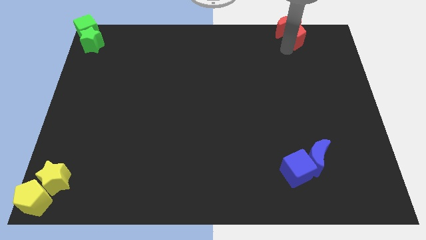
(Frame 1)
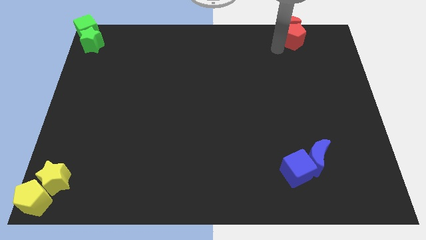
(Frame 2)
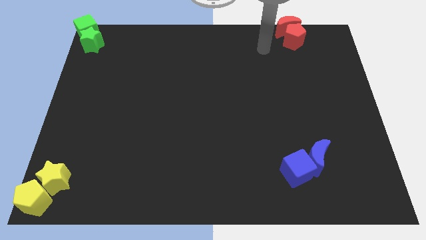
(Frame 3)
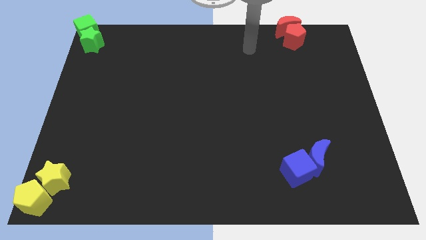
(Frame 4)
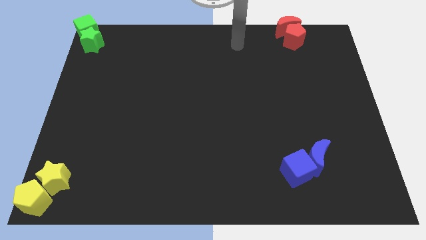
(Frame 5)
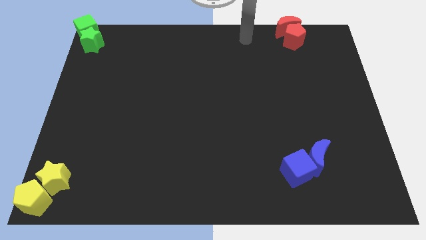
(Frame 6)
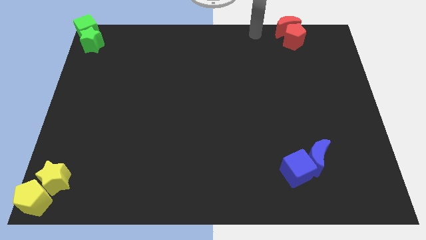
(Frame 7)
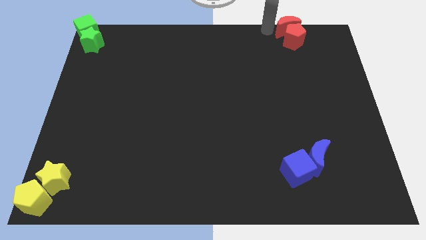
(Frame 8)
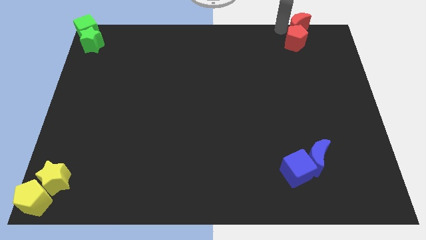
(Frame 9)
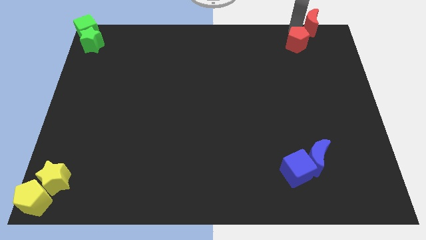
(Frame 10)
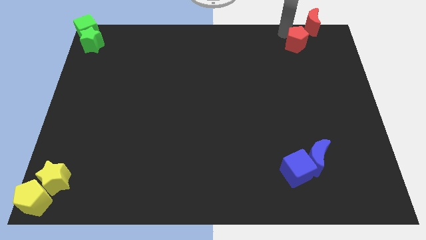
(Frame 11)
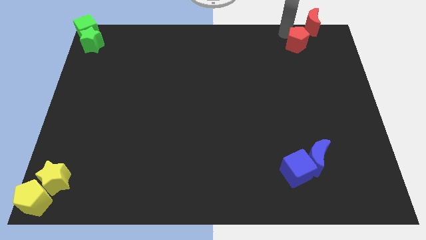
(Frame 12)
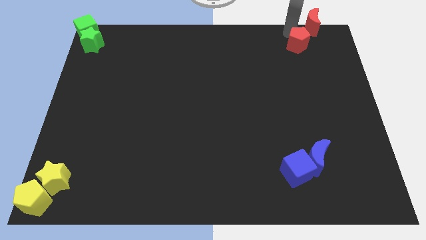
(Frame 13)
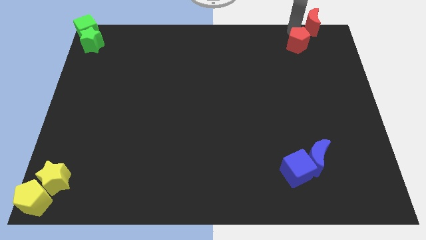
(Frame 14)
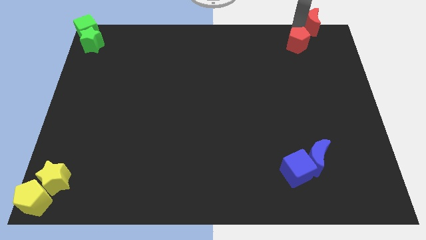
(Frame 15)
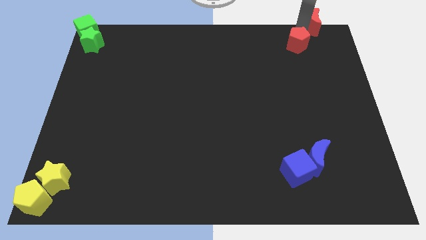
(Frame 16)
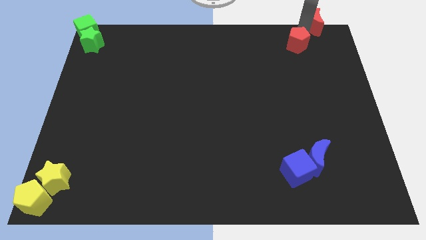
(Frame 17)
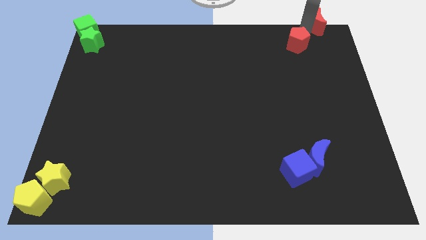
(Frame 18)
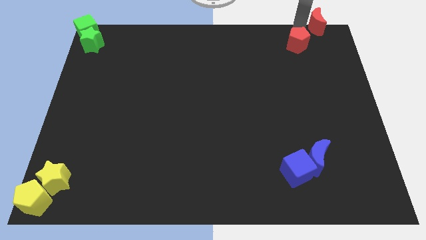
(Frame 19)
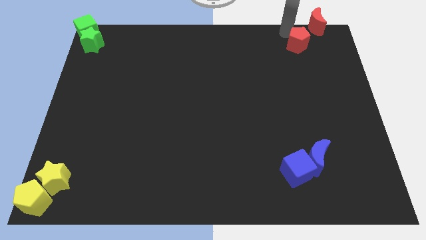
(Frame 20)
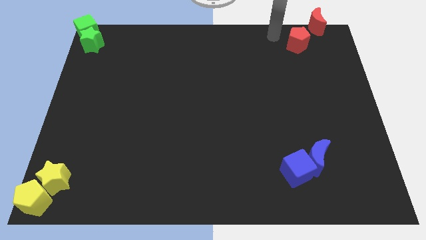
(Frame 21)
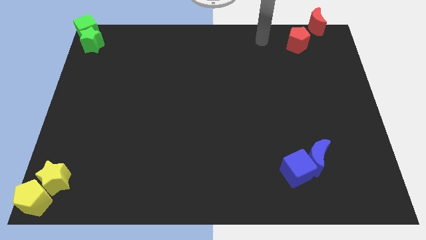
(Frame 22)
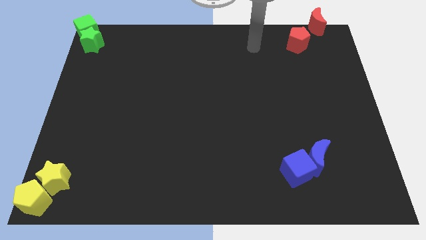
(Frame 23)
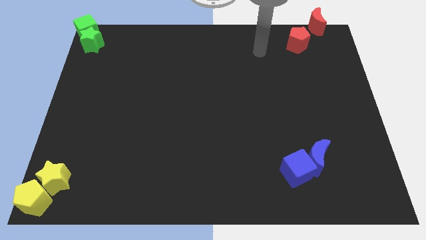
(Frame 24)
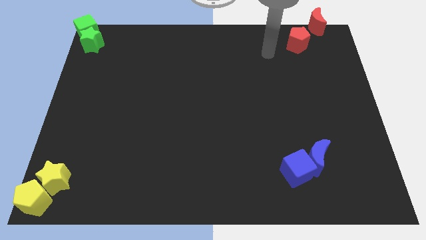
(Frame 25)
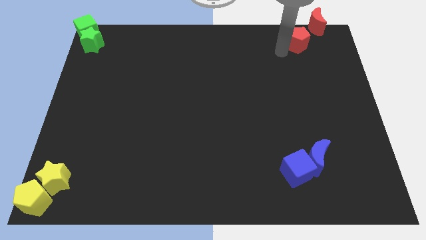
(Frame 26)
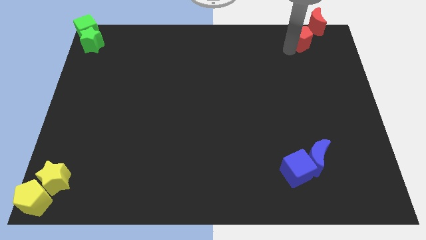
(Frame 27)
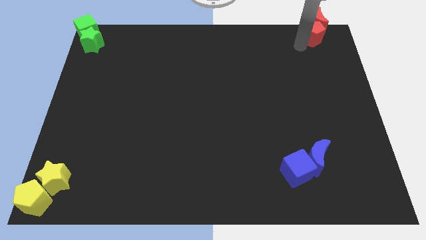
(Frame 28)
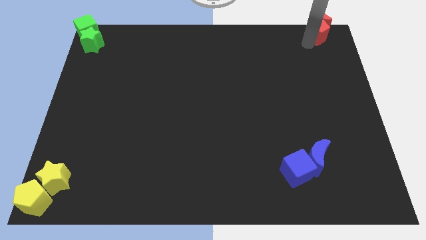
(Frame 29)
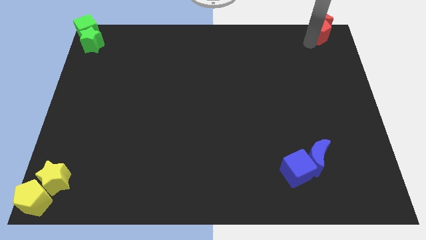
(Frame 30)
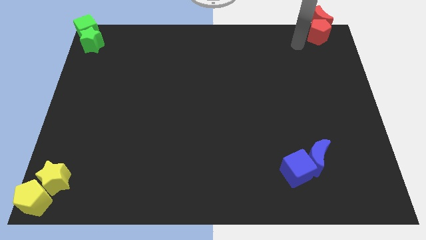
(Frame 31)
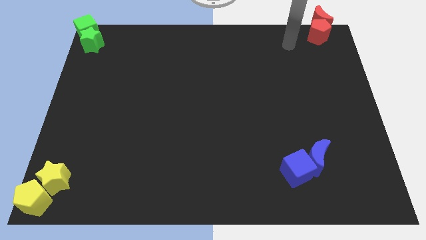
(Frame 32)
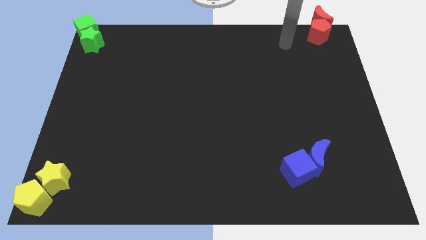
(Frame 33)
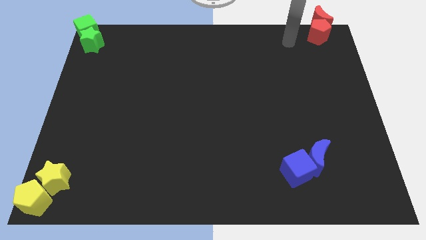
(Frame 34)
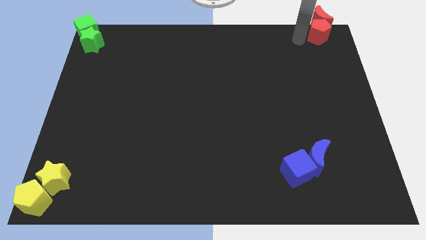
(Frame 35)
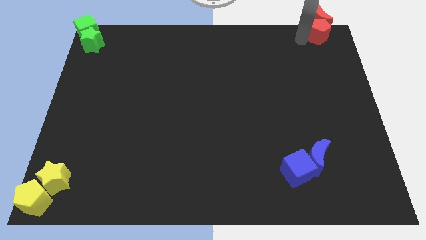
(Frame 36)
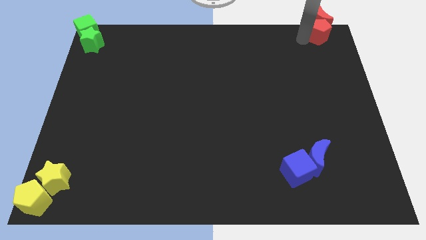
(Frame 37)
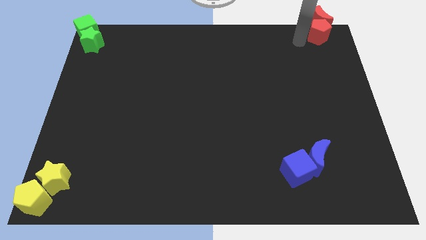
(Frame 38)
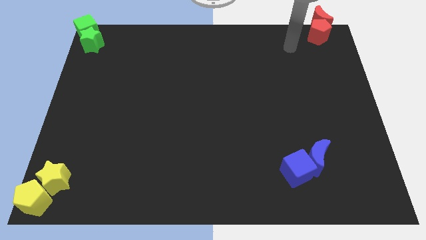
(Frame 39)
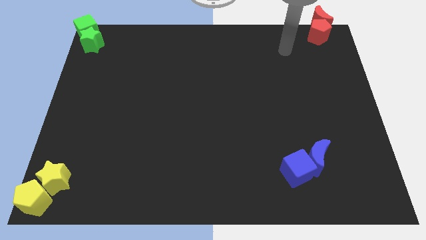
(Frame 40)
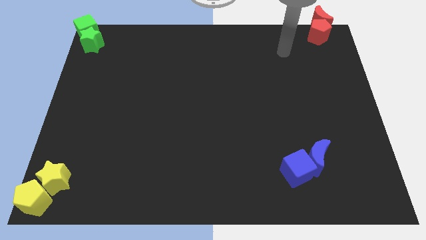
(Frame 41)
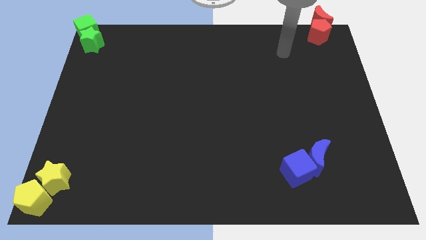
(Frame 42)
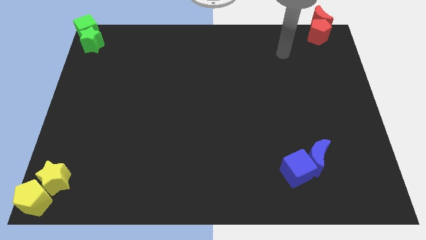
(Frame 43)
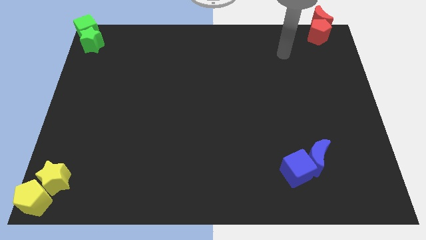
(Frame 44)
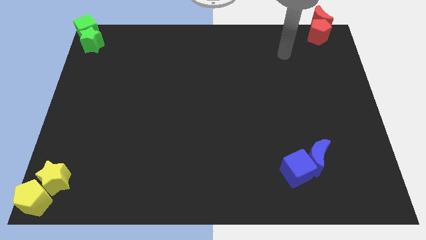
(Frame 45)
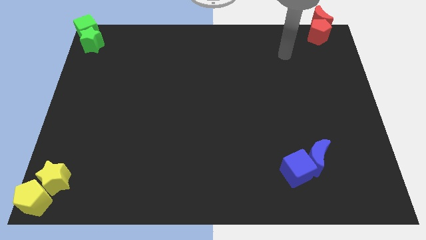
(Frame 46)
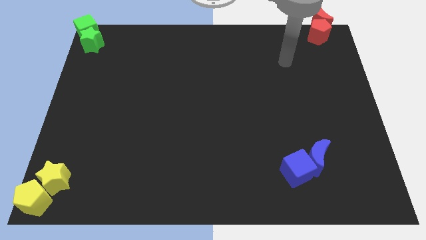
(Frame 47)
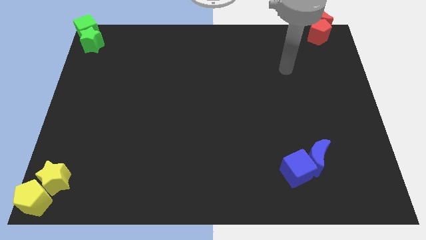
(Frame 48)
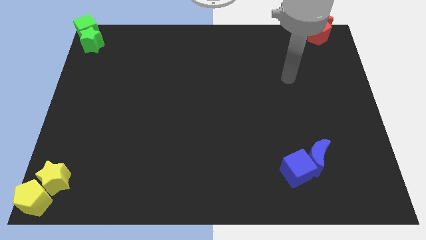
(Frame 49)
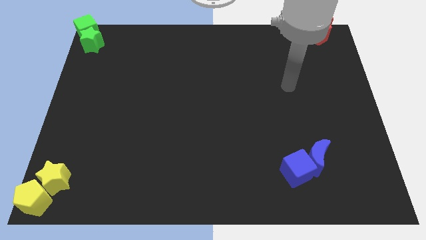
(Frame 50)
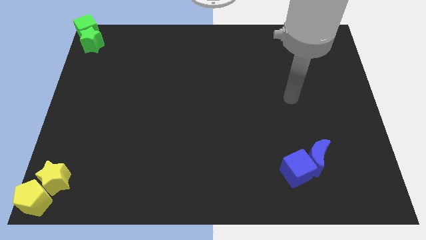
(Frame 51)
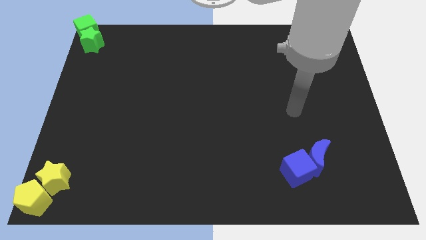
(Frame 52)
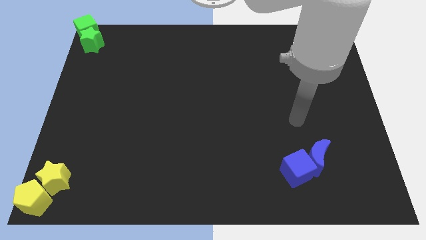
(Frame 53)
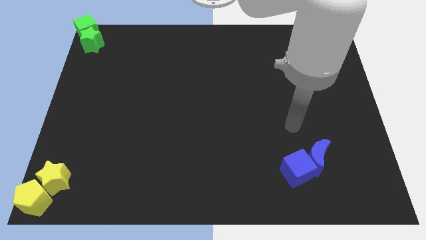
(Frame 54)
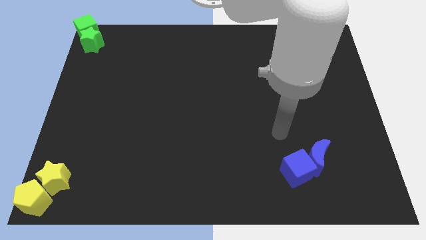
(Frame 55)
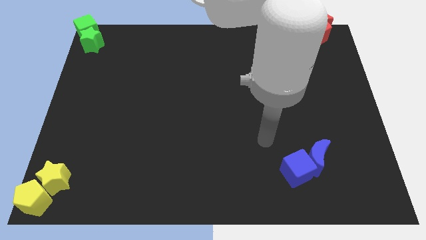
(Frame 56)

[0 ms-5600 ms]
push the red blocks towards the top right corner of the board

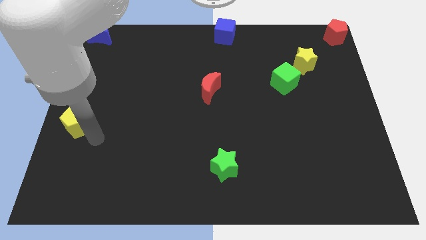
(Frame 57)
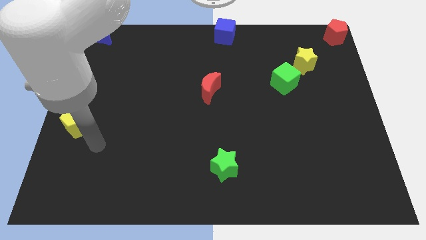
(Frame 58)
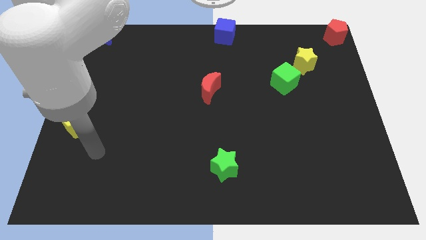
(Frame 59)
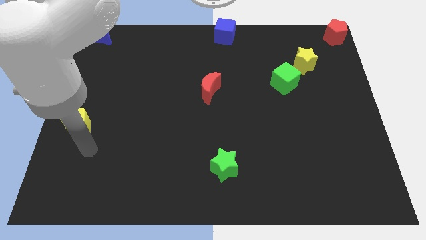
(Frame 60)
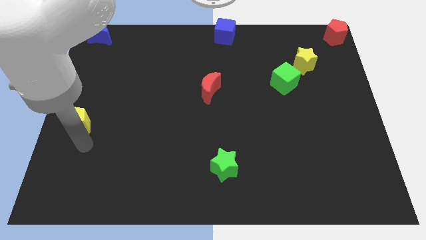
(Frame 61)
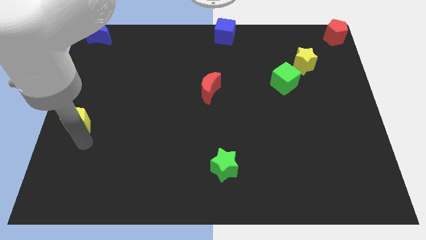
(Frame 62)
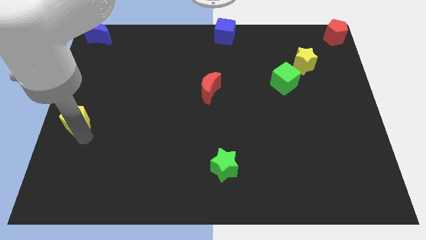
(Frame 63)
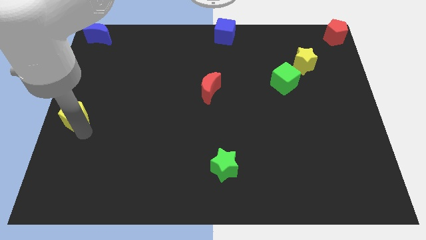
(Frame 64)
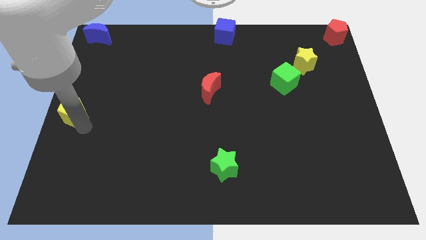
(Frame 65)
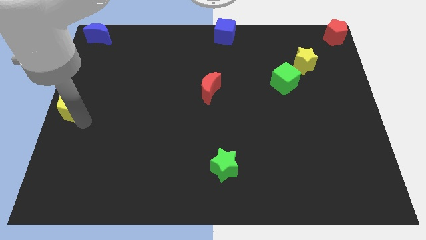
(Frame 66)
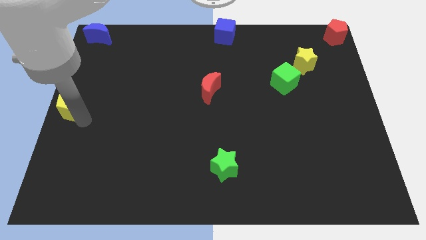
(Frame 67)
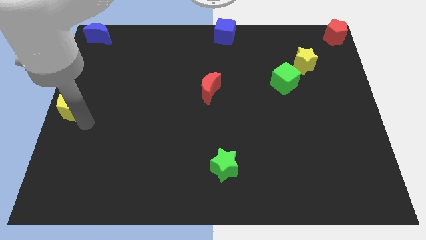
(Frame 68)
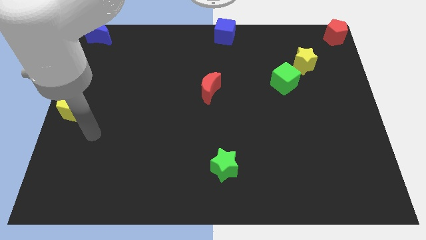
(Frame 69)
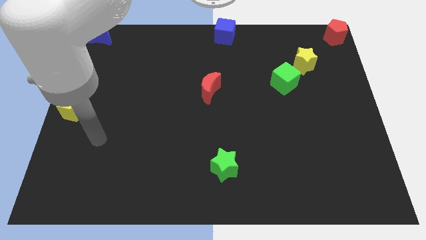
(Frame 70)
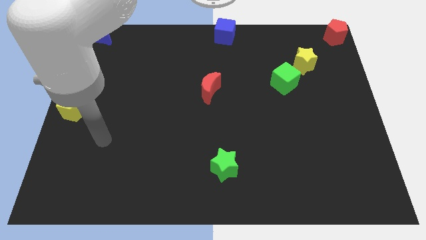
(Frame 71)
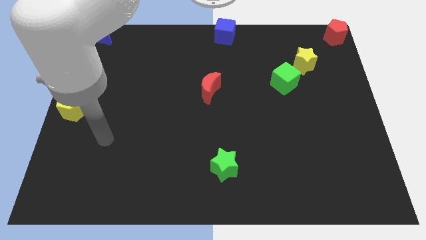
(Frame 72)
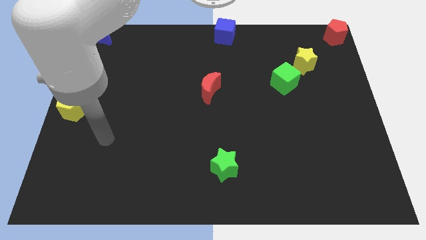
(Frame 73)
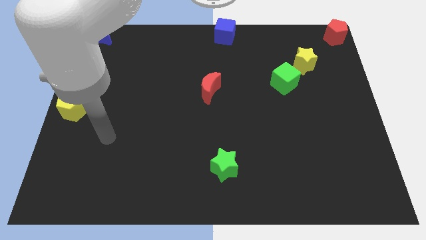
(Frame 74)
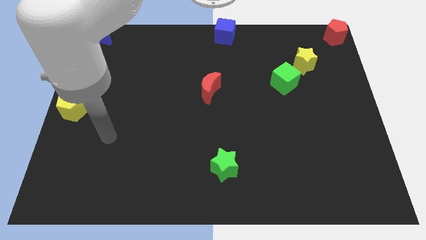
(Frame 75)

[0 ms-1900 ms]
place the yellow pentagon at the left centre of the board

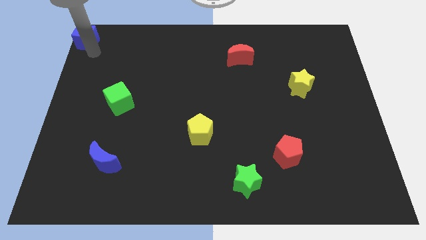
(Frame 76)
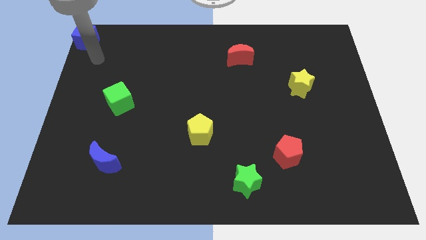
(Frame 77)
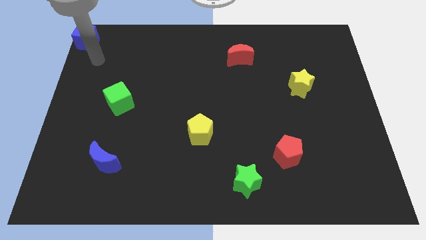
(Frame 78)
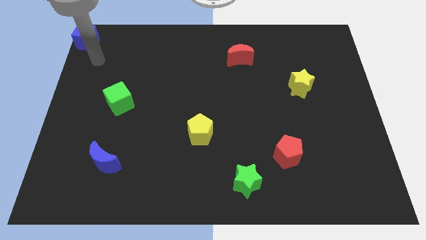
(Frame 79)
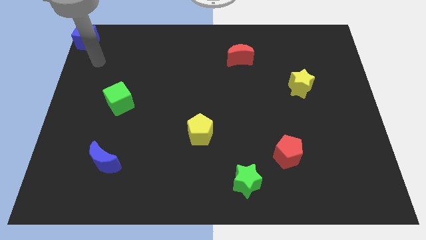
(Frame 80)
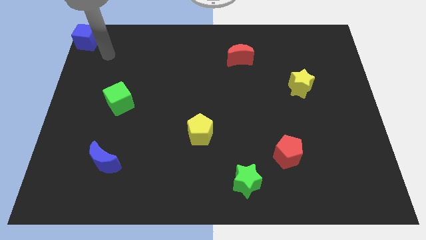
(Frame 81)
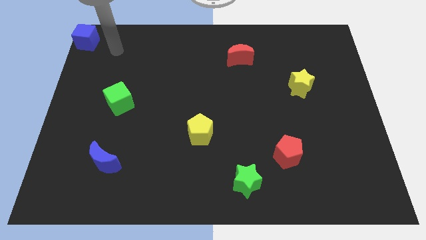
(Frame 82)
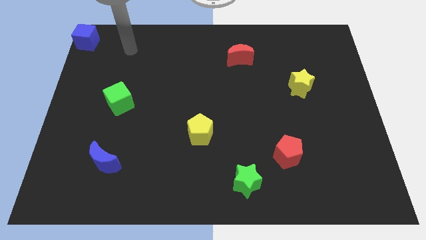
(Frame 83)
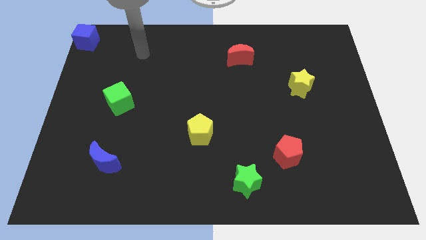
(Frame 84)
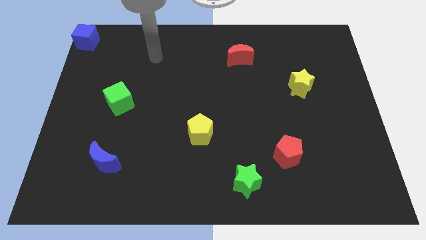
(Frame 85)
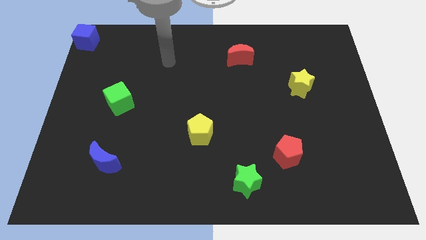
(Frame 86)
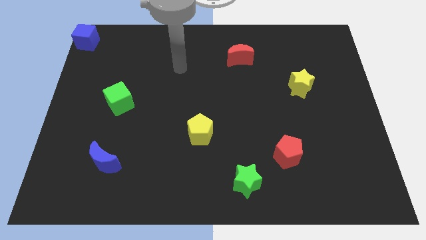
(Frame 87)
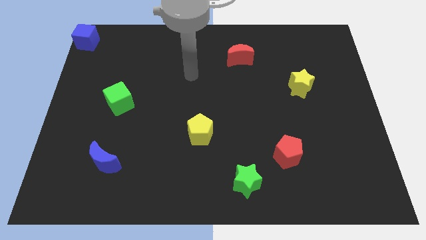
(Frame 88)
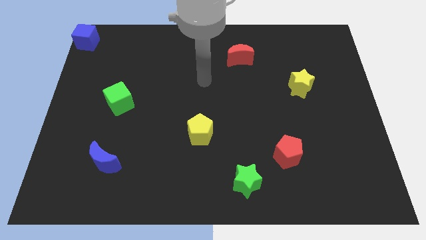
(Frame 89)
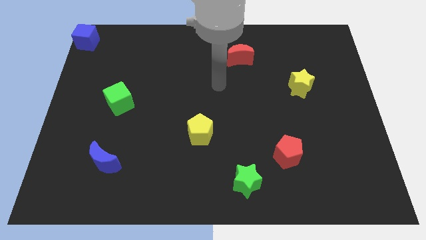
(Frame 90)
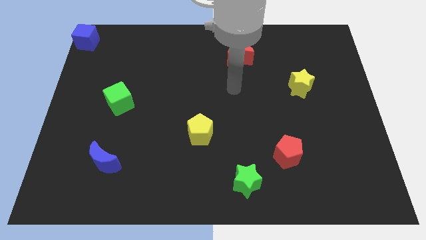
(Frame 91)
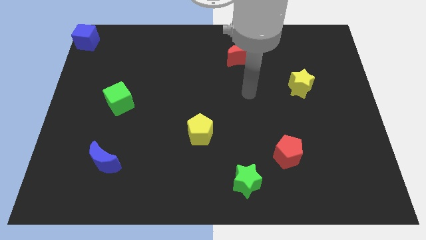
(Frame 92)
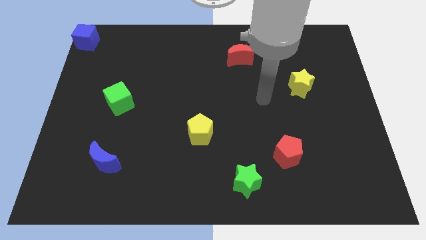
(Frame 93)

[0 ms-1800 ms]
move the arm away from the blue cube
